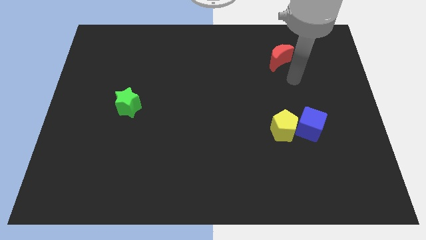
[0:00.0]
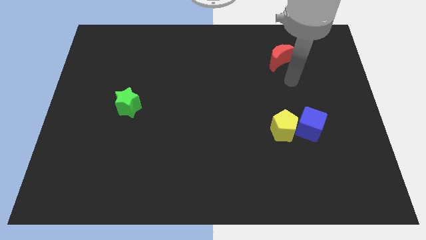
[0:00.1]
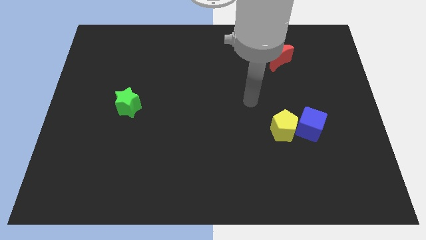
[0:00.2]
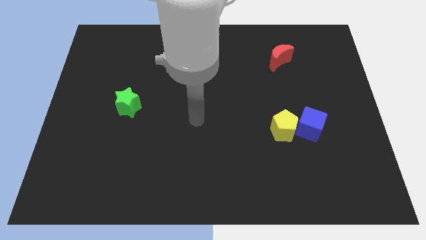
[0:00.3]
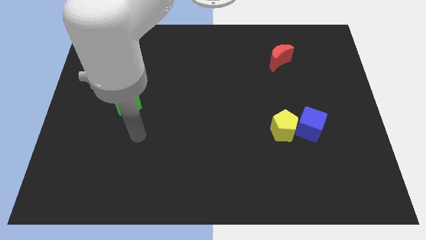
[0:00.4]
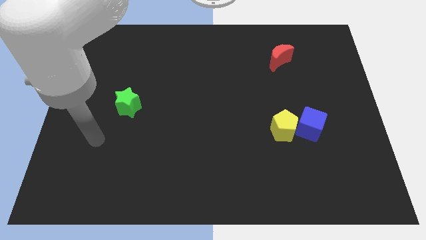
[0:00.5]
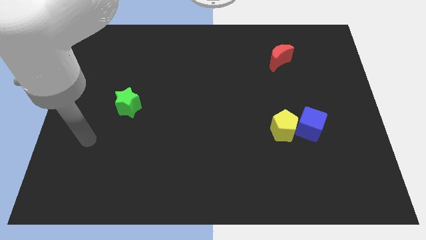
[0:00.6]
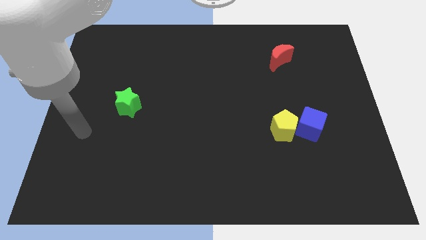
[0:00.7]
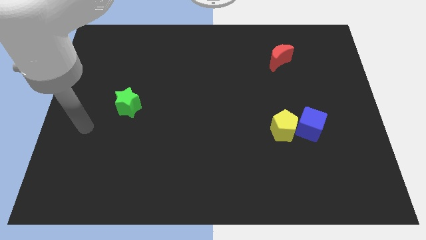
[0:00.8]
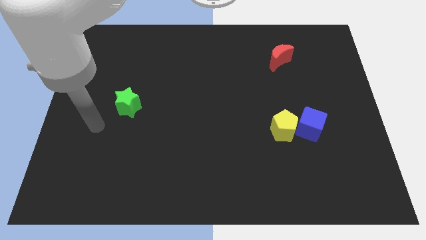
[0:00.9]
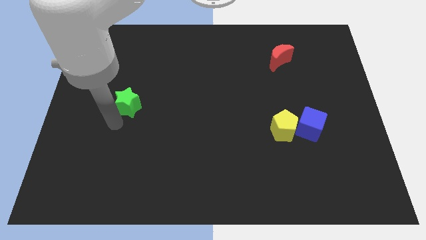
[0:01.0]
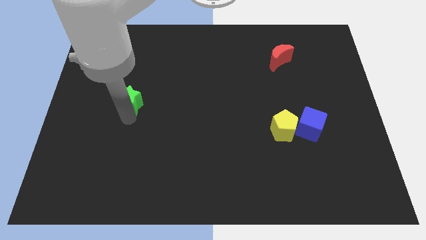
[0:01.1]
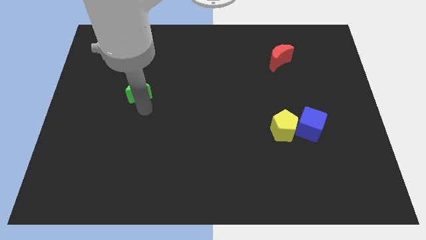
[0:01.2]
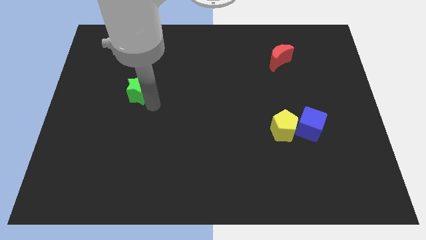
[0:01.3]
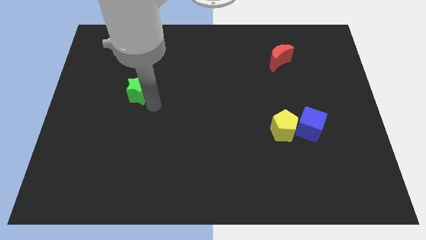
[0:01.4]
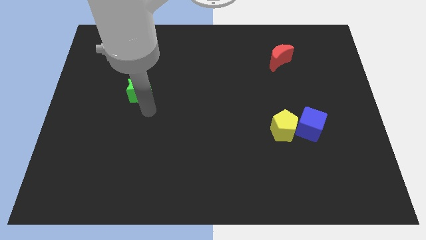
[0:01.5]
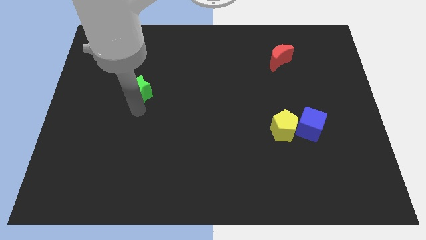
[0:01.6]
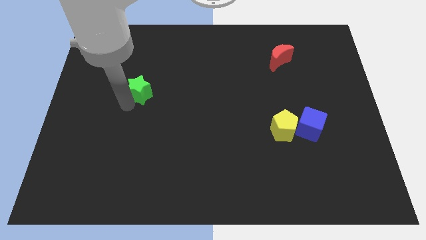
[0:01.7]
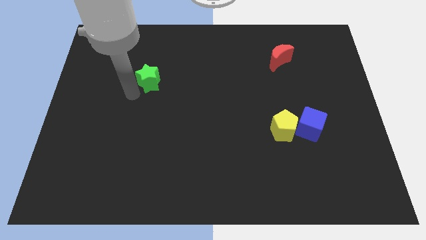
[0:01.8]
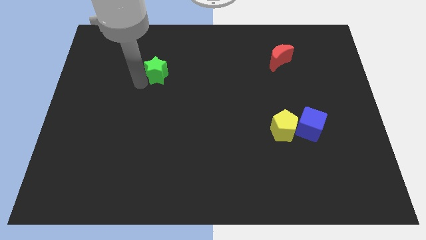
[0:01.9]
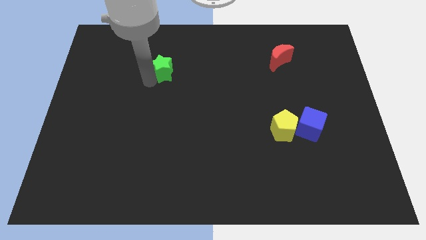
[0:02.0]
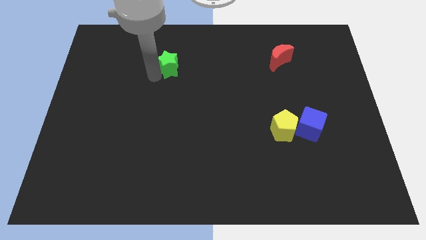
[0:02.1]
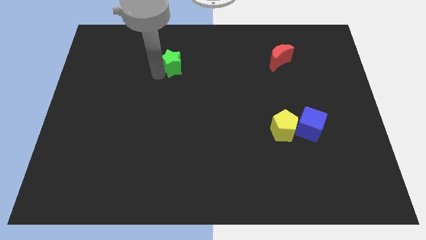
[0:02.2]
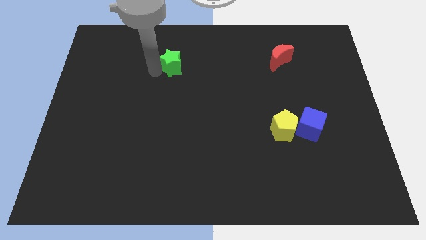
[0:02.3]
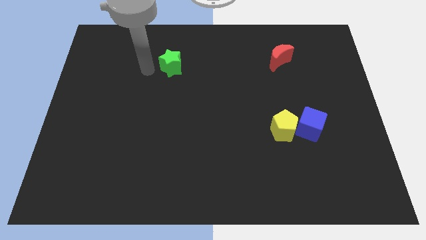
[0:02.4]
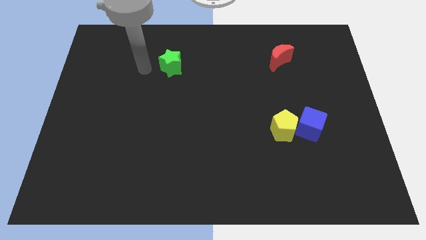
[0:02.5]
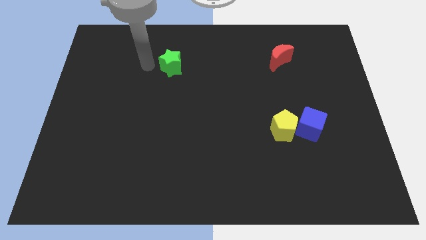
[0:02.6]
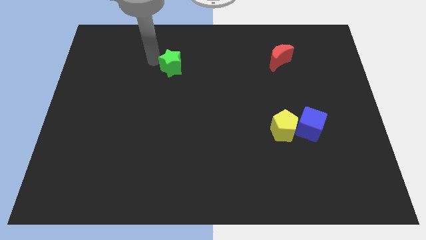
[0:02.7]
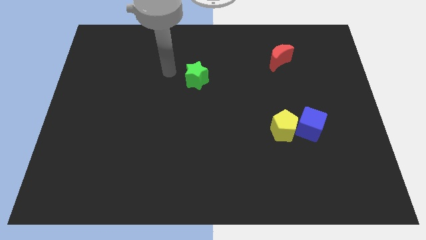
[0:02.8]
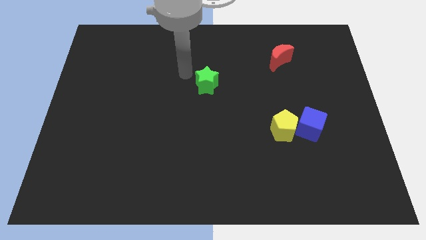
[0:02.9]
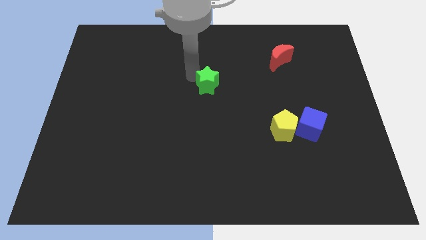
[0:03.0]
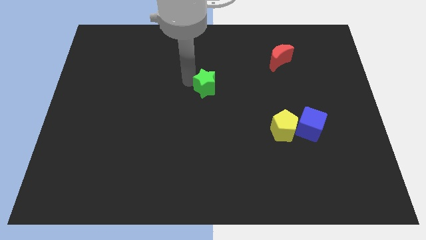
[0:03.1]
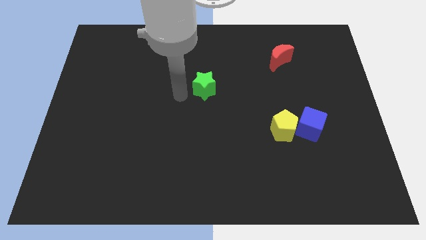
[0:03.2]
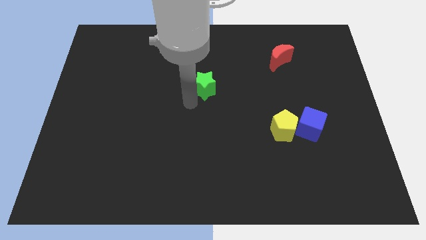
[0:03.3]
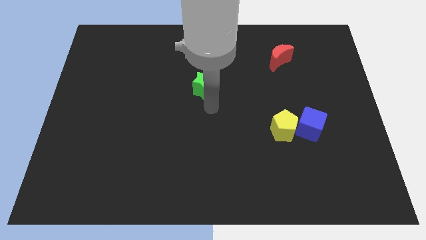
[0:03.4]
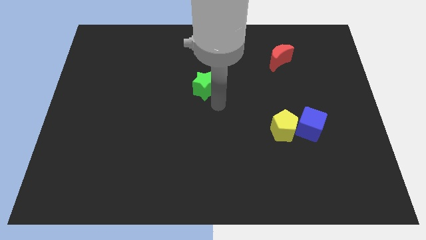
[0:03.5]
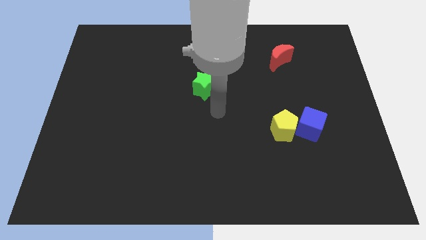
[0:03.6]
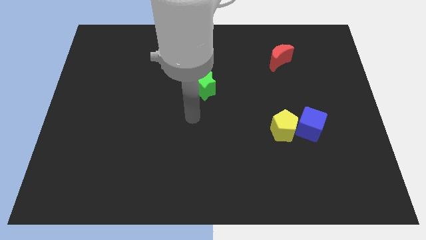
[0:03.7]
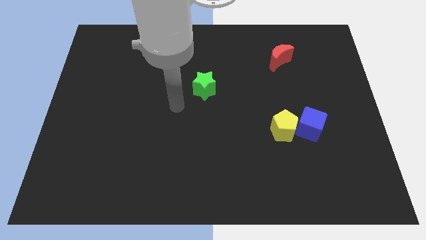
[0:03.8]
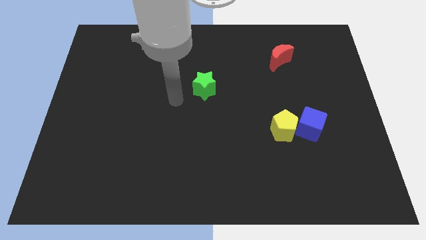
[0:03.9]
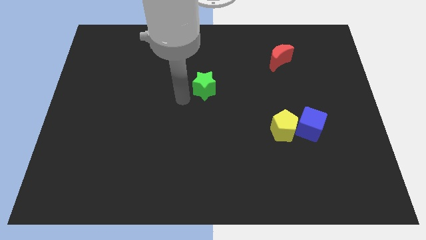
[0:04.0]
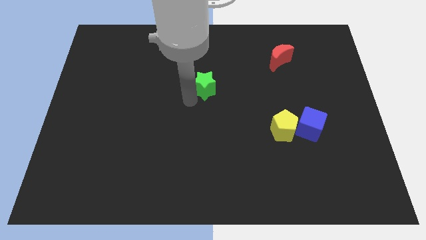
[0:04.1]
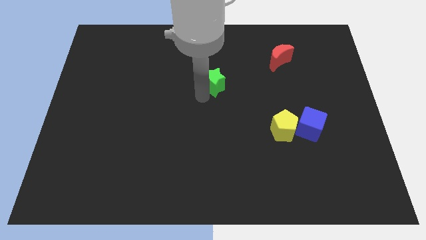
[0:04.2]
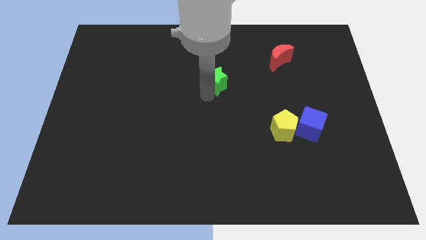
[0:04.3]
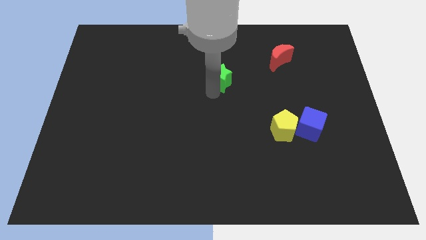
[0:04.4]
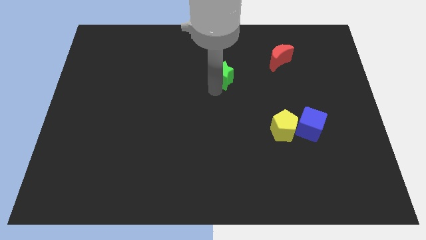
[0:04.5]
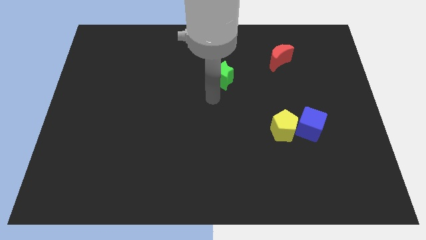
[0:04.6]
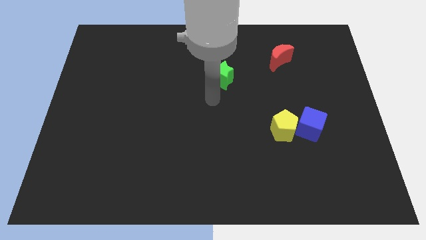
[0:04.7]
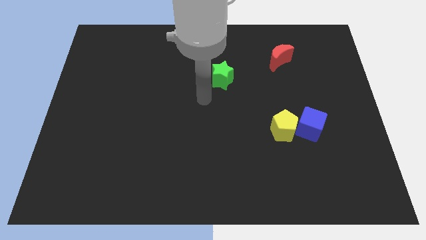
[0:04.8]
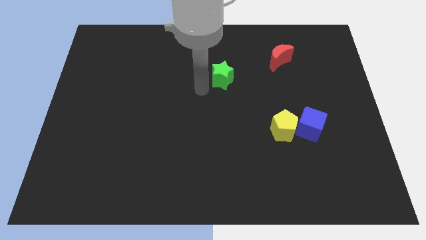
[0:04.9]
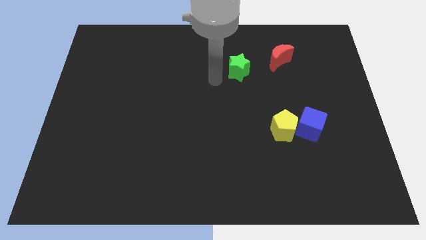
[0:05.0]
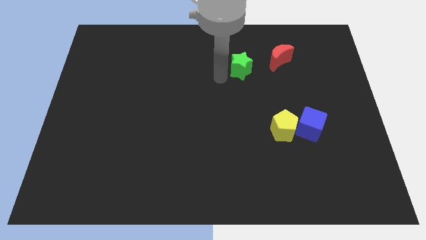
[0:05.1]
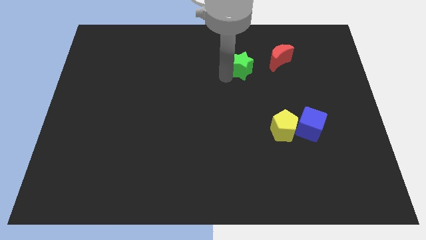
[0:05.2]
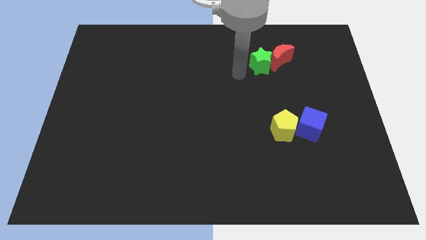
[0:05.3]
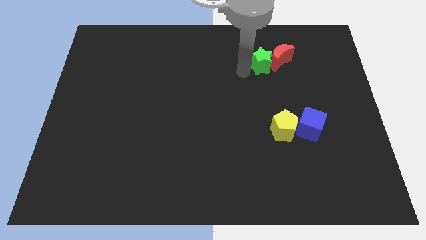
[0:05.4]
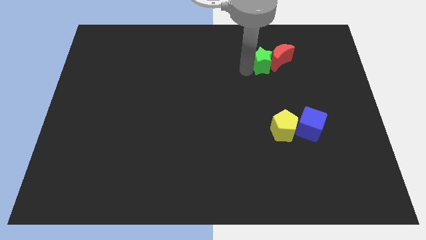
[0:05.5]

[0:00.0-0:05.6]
slide the green block next to the red block

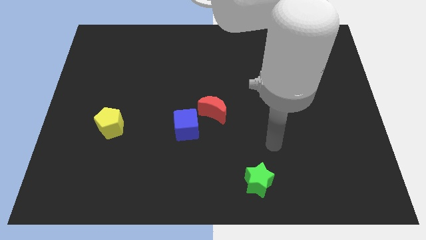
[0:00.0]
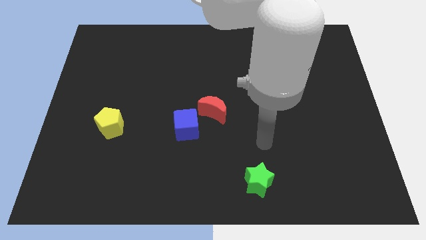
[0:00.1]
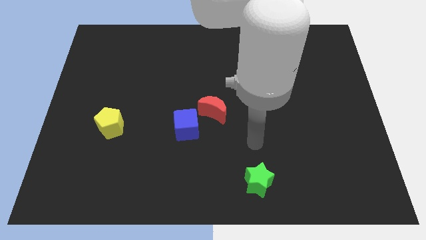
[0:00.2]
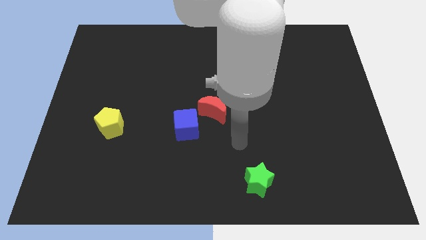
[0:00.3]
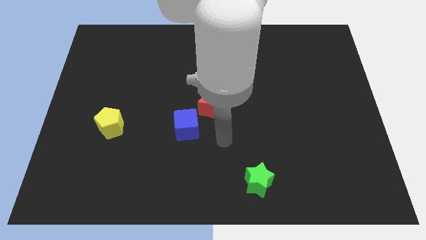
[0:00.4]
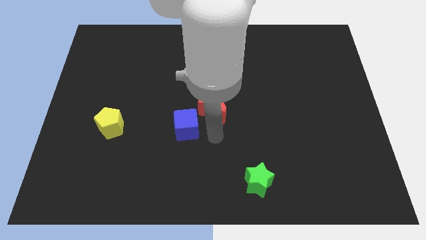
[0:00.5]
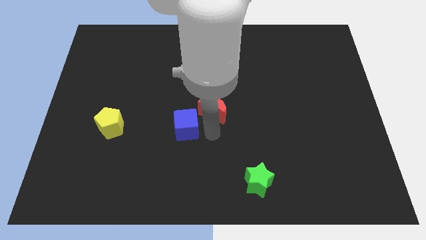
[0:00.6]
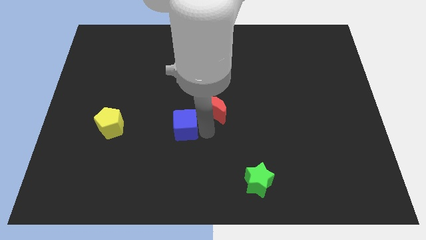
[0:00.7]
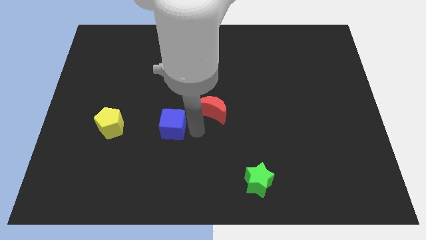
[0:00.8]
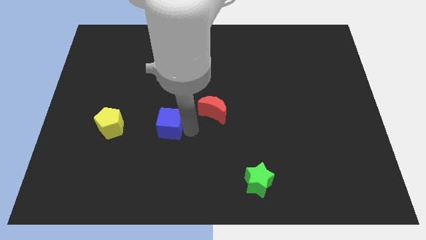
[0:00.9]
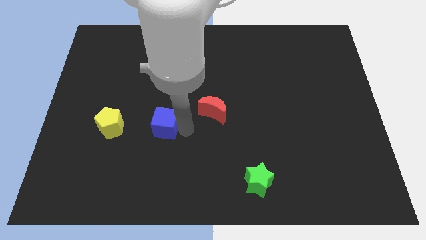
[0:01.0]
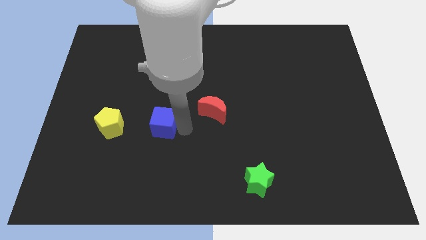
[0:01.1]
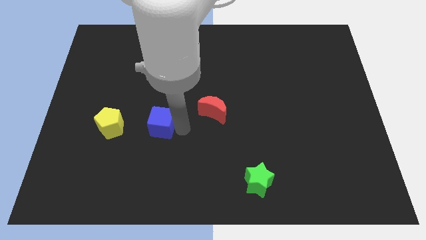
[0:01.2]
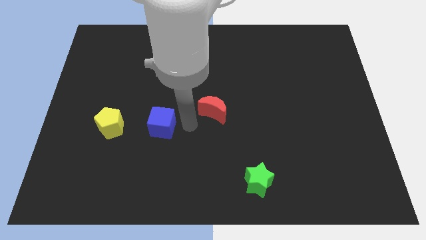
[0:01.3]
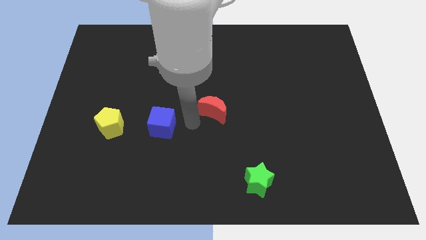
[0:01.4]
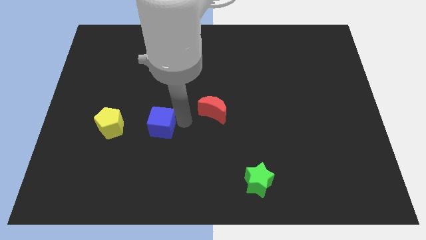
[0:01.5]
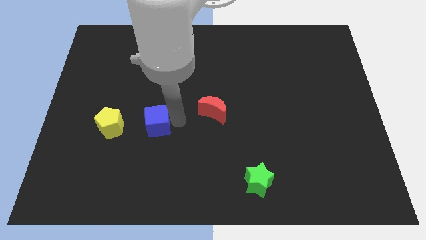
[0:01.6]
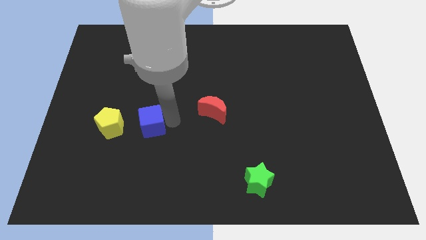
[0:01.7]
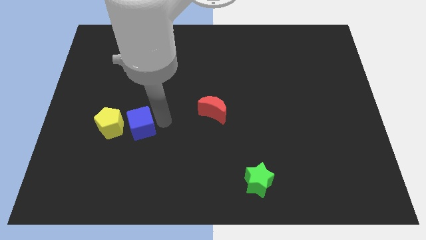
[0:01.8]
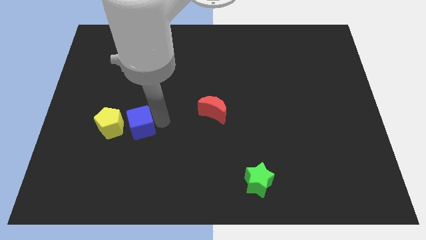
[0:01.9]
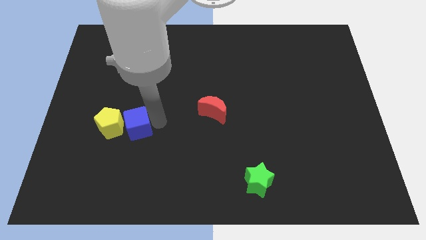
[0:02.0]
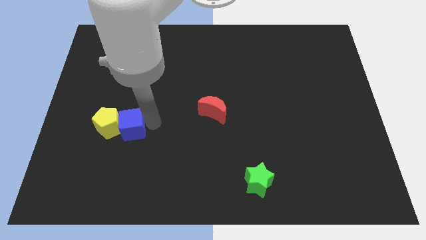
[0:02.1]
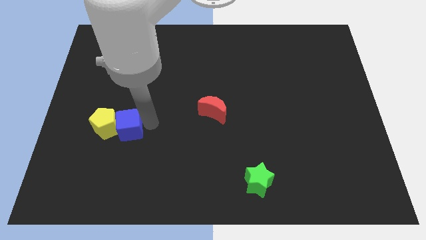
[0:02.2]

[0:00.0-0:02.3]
move the cube towards the yellow block

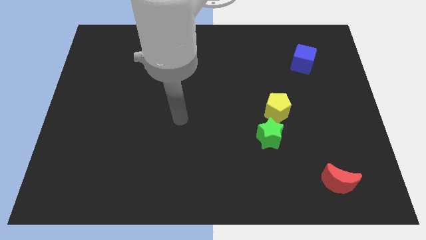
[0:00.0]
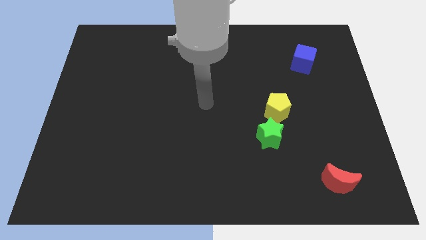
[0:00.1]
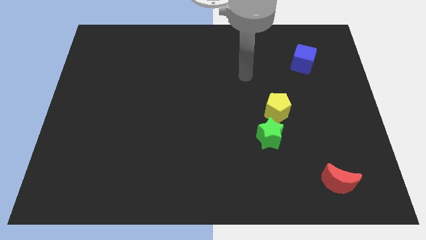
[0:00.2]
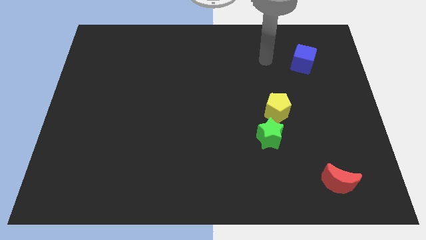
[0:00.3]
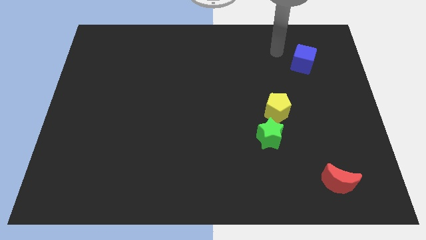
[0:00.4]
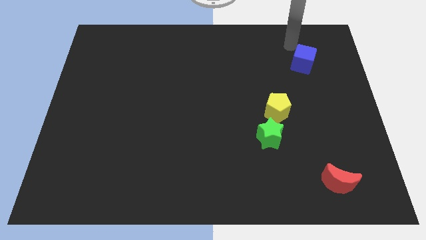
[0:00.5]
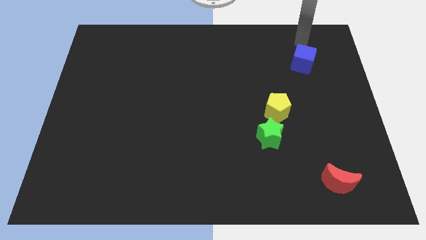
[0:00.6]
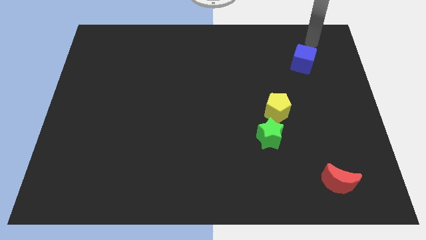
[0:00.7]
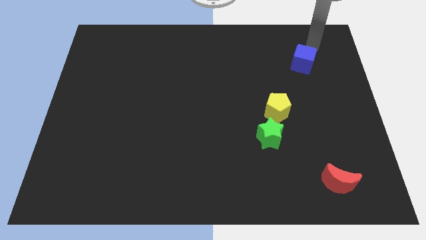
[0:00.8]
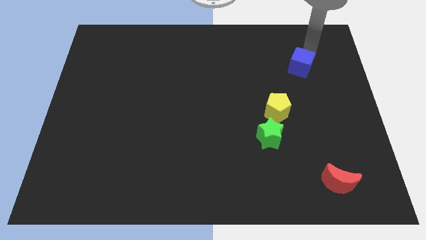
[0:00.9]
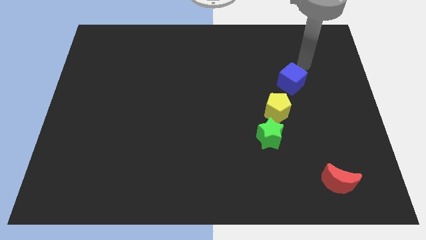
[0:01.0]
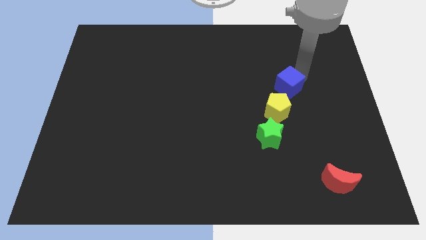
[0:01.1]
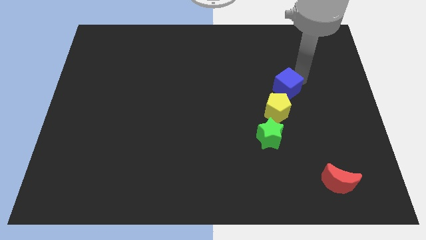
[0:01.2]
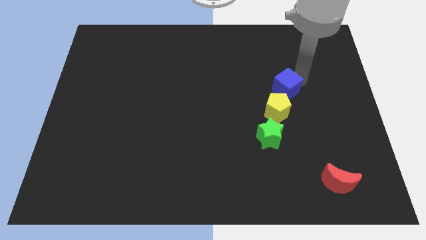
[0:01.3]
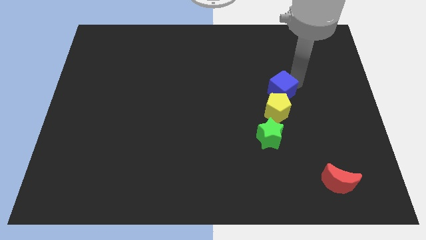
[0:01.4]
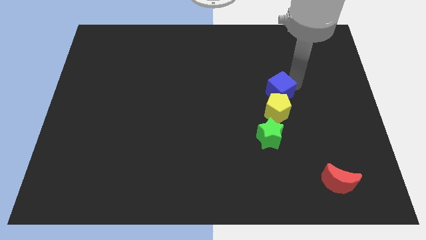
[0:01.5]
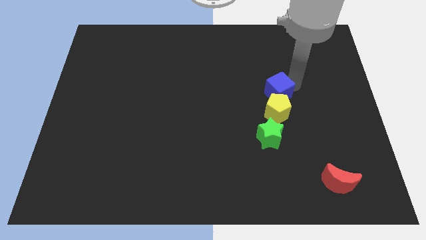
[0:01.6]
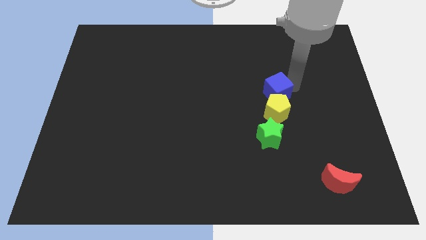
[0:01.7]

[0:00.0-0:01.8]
move the blue block next to the pentagon
